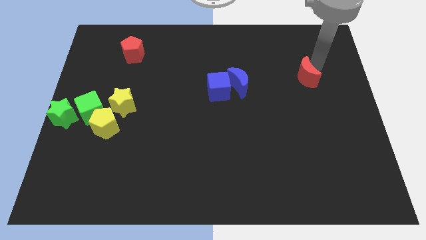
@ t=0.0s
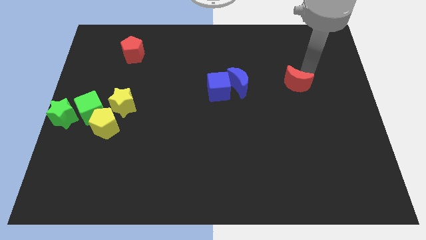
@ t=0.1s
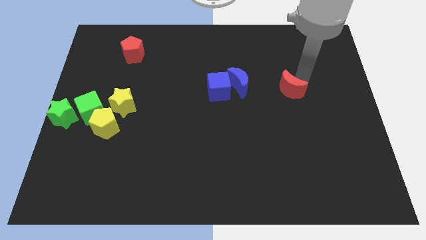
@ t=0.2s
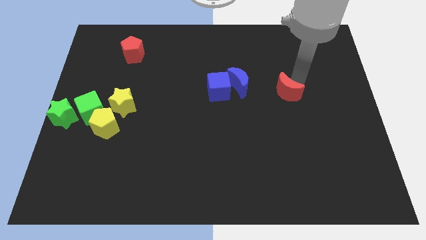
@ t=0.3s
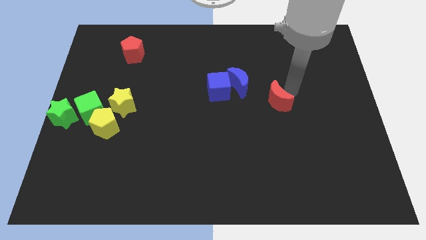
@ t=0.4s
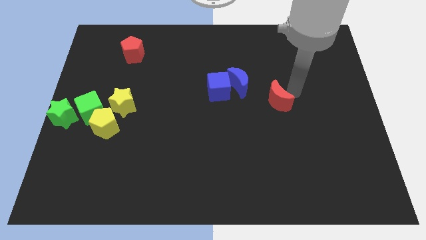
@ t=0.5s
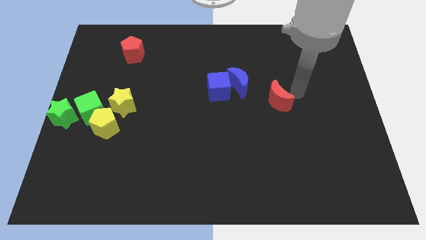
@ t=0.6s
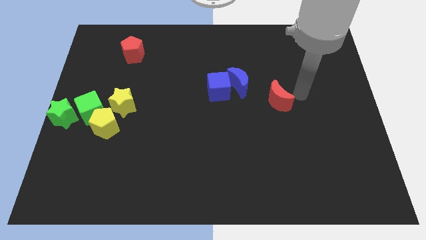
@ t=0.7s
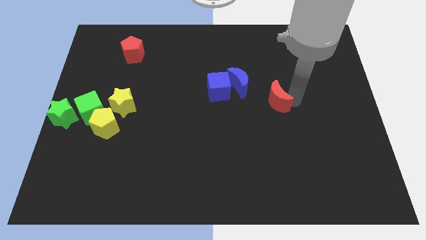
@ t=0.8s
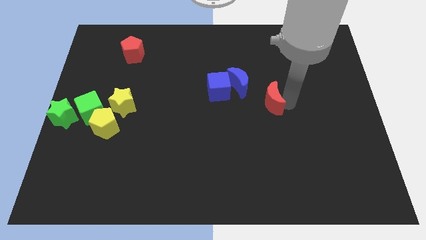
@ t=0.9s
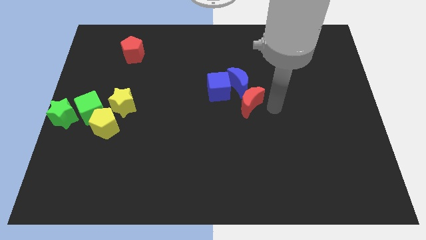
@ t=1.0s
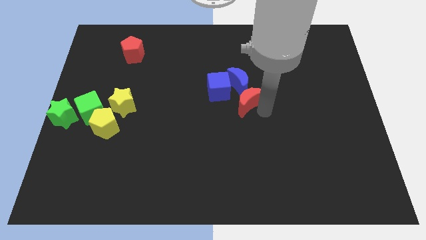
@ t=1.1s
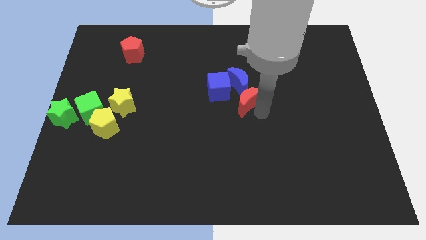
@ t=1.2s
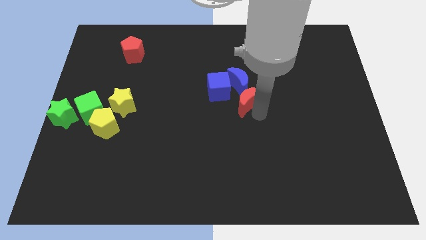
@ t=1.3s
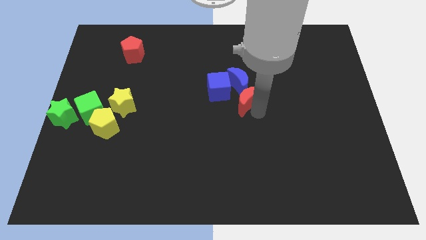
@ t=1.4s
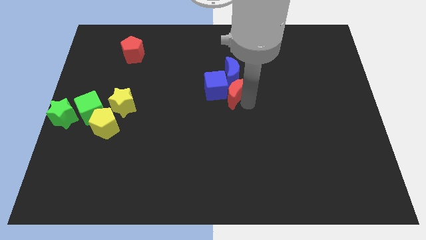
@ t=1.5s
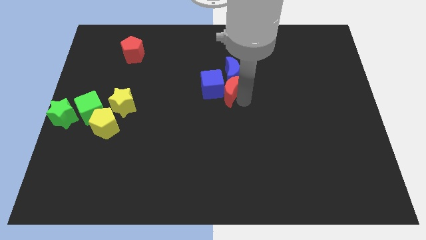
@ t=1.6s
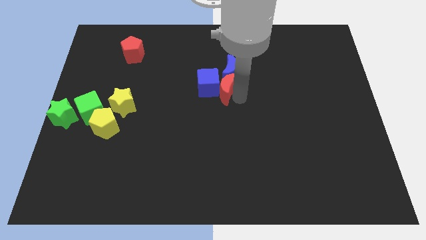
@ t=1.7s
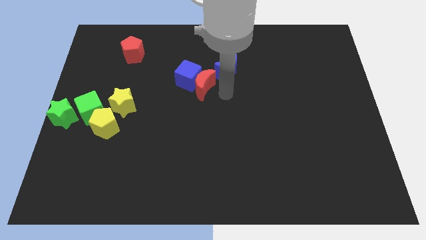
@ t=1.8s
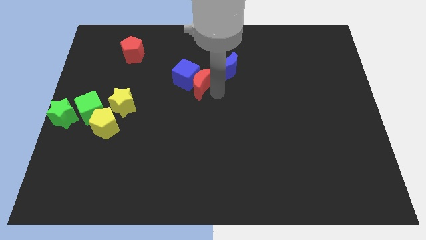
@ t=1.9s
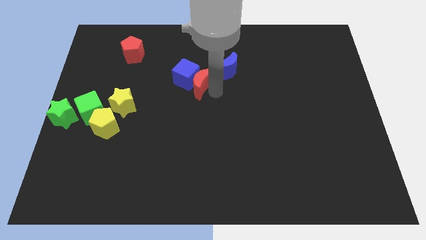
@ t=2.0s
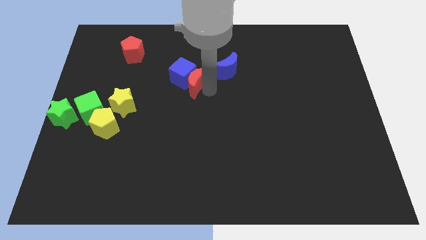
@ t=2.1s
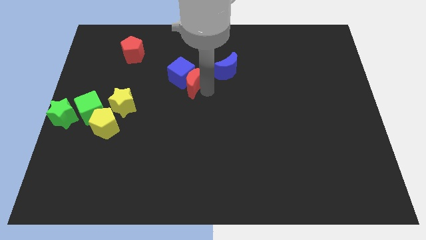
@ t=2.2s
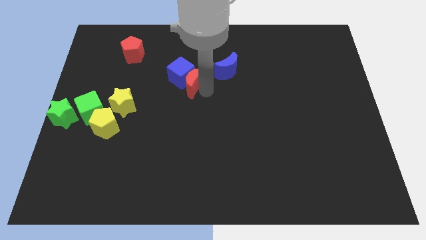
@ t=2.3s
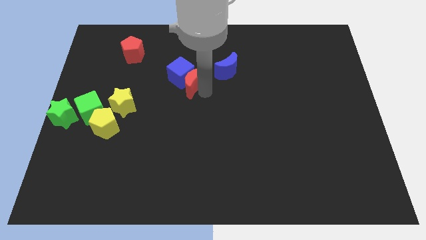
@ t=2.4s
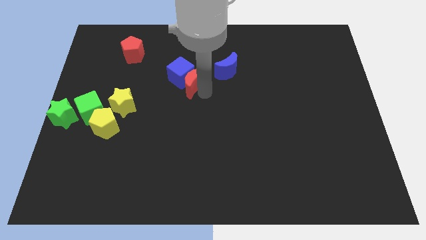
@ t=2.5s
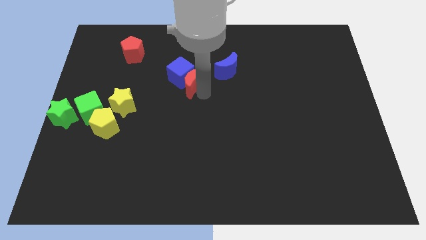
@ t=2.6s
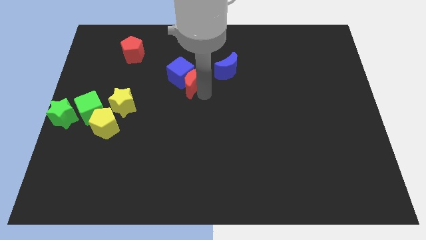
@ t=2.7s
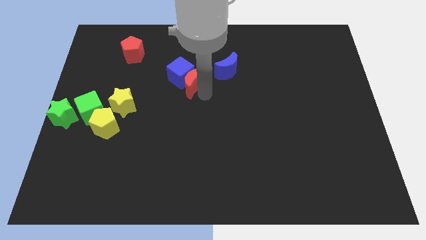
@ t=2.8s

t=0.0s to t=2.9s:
push the red moon into the blue cube

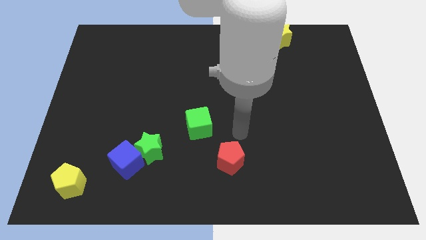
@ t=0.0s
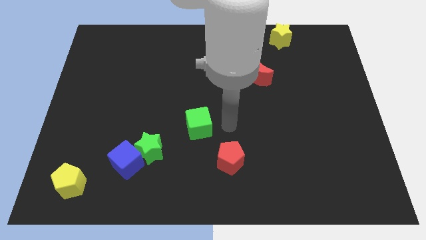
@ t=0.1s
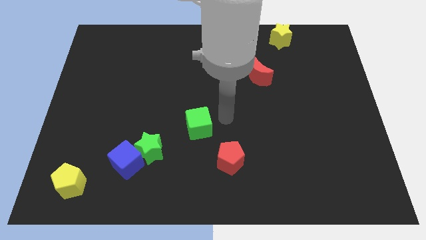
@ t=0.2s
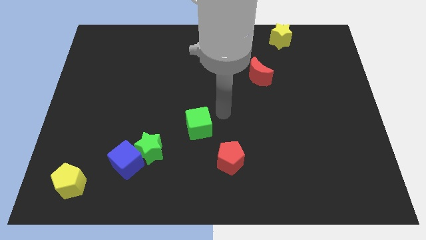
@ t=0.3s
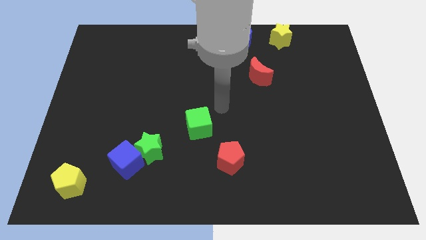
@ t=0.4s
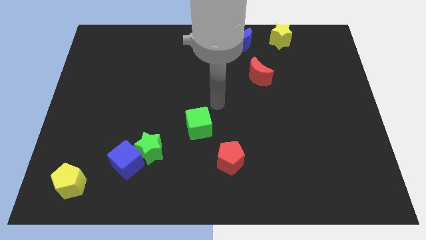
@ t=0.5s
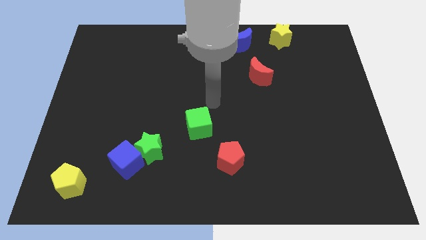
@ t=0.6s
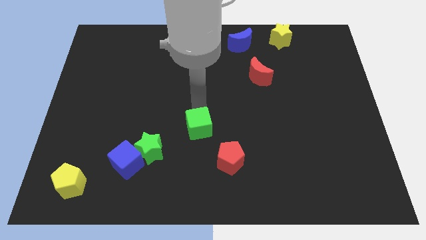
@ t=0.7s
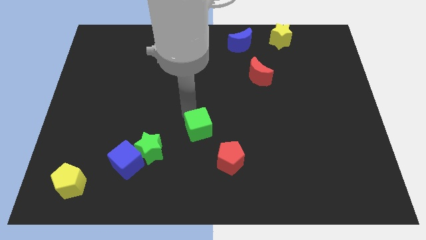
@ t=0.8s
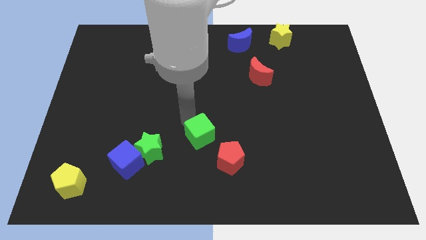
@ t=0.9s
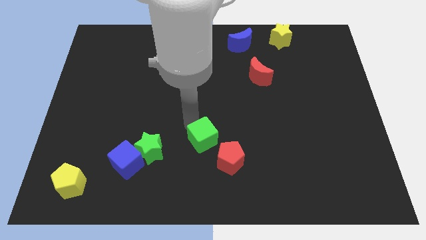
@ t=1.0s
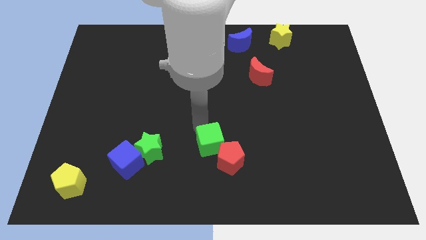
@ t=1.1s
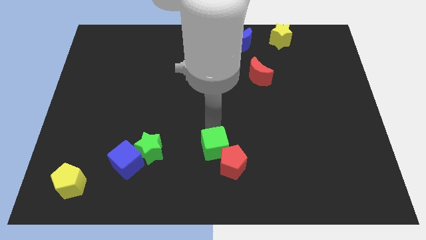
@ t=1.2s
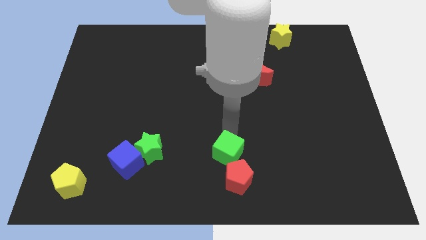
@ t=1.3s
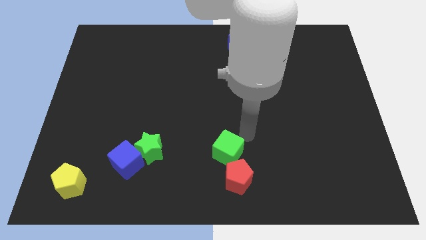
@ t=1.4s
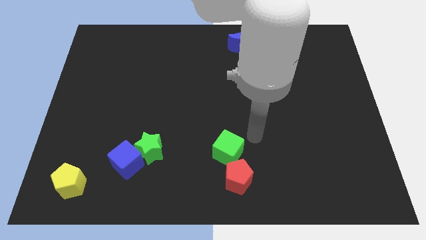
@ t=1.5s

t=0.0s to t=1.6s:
push the green cube into red pentagon

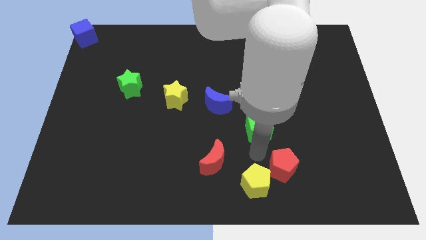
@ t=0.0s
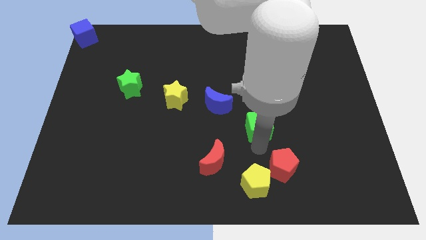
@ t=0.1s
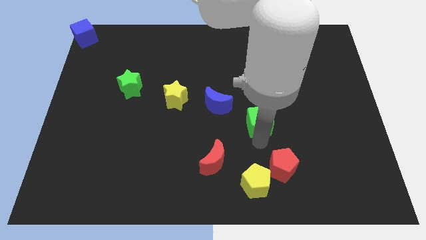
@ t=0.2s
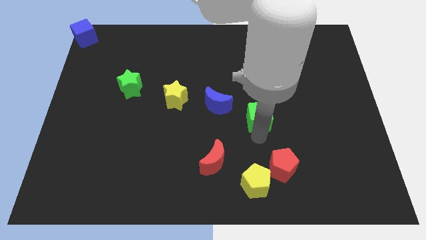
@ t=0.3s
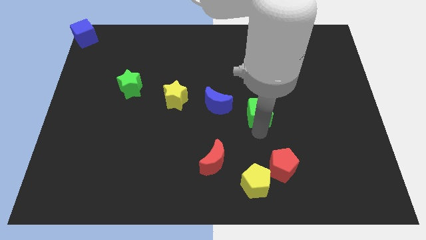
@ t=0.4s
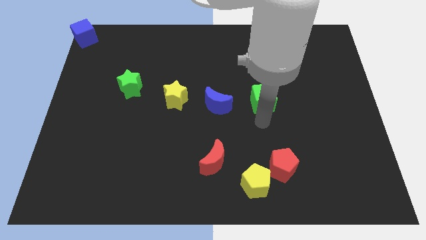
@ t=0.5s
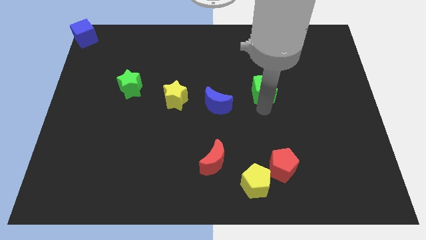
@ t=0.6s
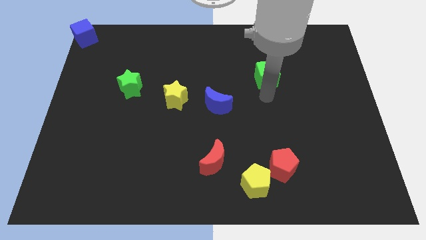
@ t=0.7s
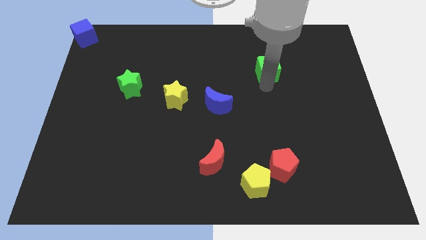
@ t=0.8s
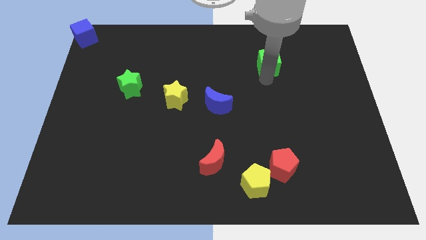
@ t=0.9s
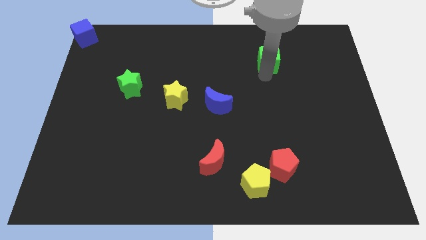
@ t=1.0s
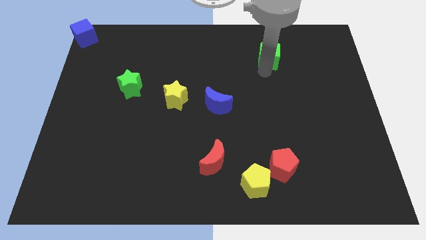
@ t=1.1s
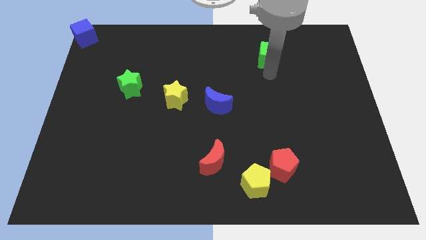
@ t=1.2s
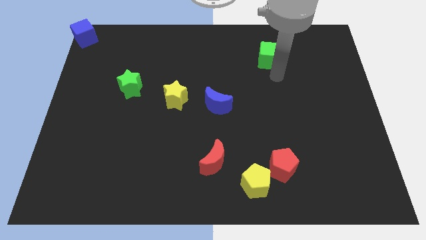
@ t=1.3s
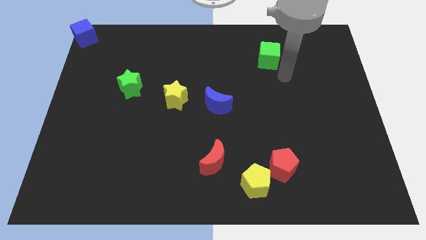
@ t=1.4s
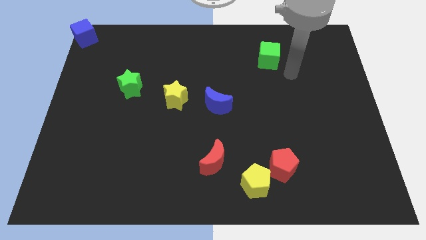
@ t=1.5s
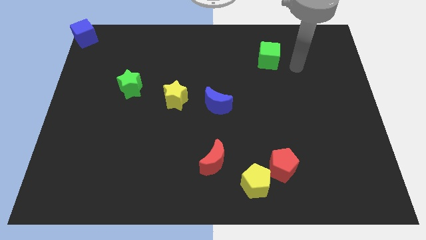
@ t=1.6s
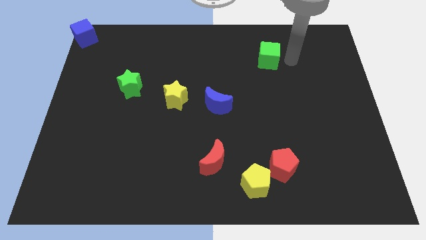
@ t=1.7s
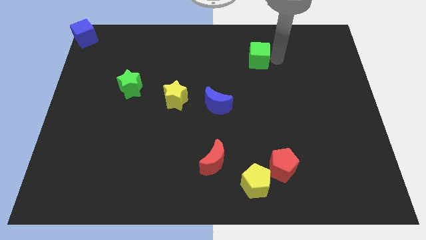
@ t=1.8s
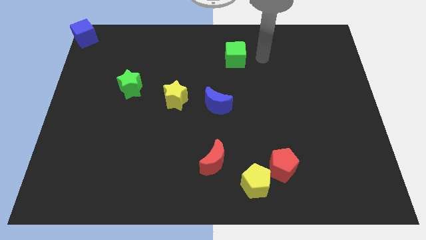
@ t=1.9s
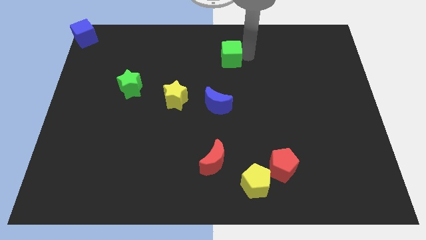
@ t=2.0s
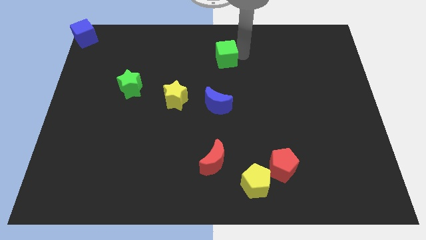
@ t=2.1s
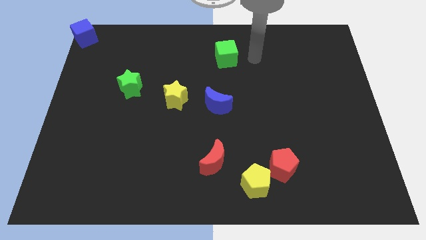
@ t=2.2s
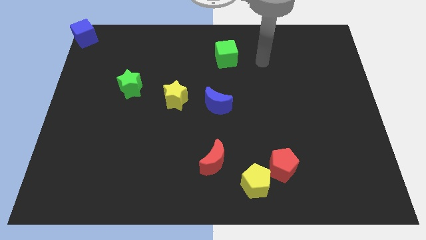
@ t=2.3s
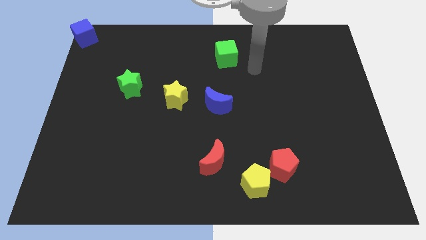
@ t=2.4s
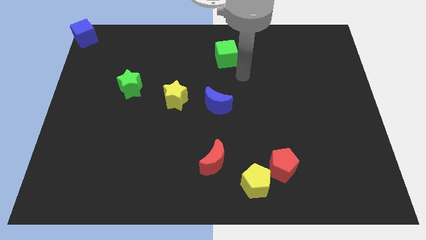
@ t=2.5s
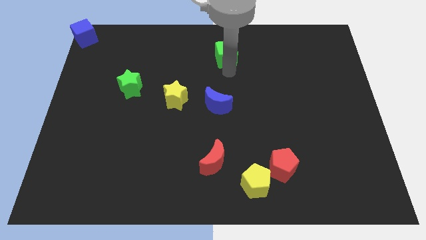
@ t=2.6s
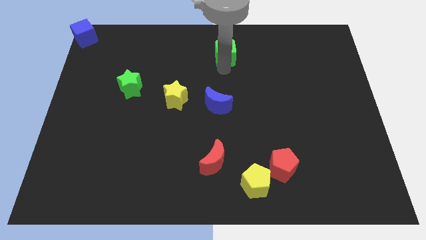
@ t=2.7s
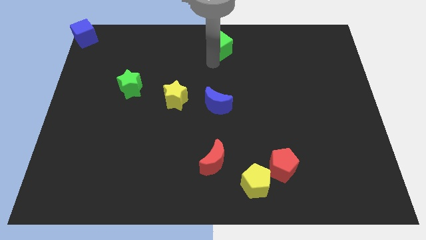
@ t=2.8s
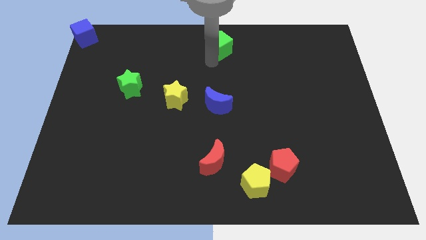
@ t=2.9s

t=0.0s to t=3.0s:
move the green cube to the top center

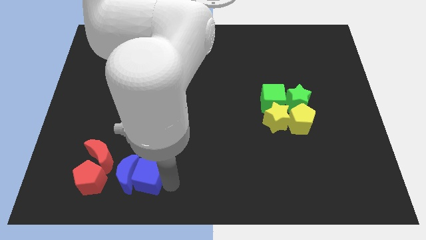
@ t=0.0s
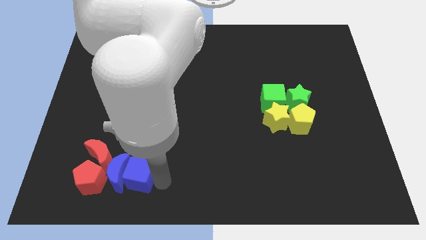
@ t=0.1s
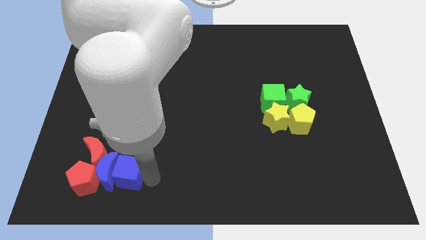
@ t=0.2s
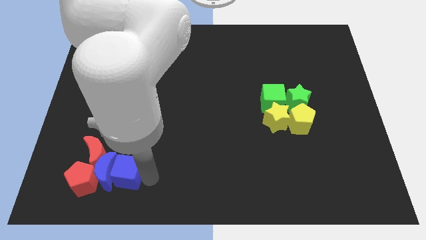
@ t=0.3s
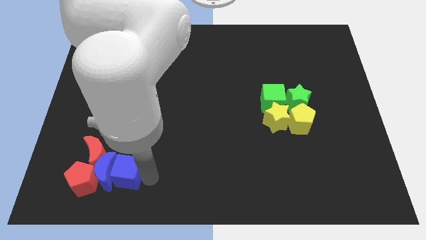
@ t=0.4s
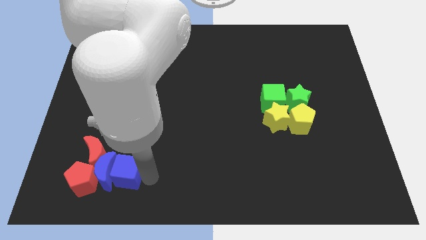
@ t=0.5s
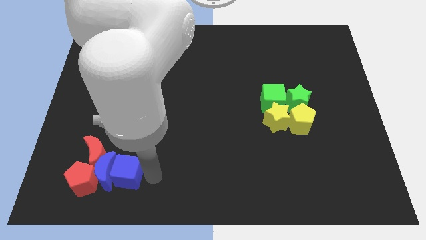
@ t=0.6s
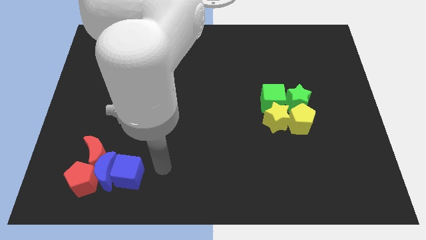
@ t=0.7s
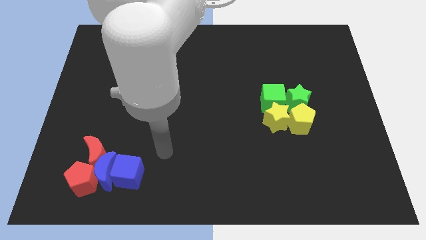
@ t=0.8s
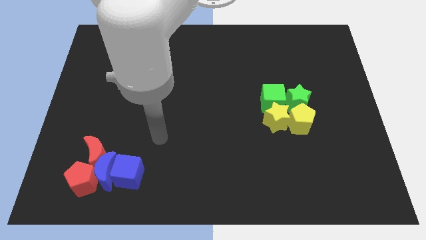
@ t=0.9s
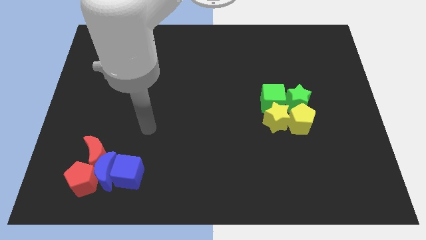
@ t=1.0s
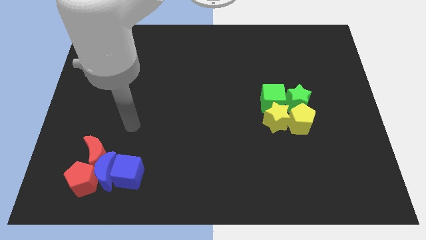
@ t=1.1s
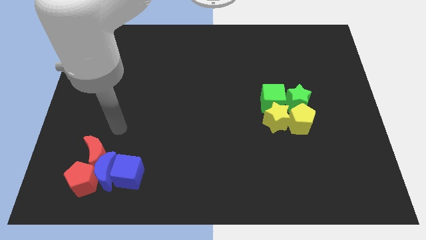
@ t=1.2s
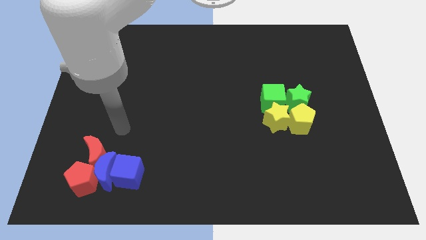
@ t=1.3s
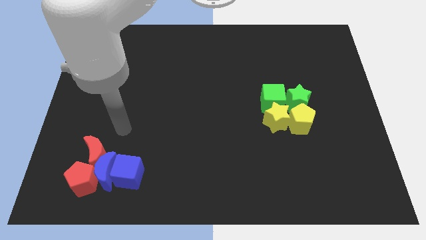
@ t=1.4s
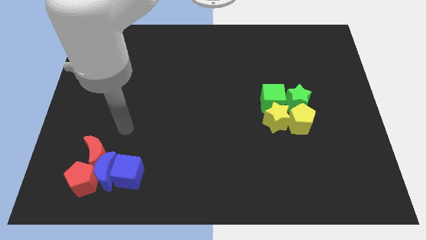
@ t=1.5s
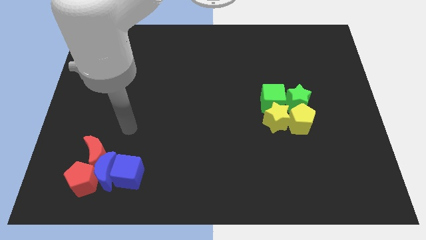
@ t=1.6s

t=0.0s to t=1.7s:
move blue objects close to the red objects
